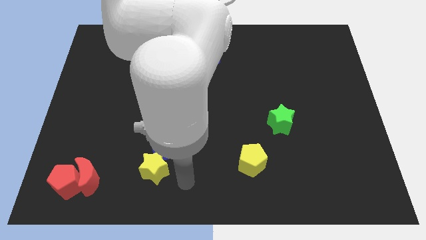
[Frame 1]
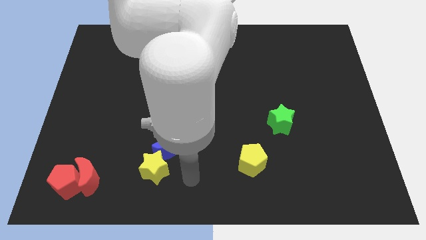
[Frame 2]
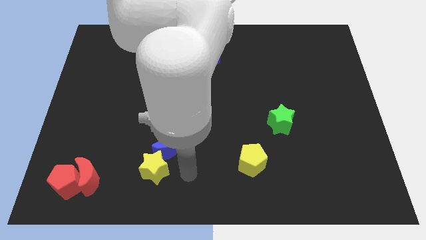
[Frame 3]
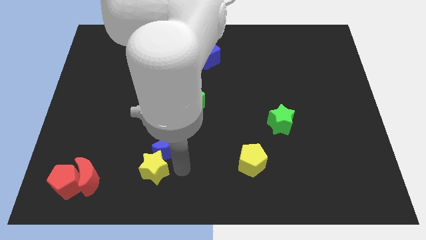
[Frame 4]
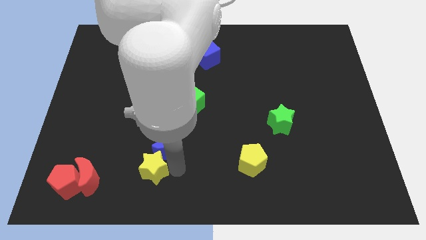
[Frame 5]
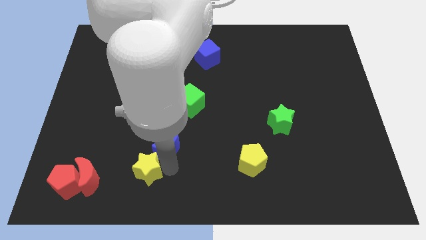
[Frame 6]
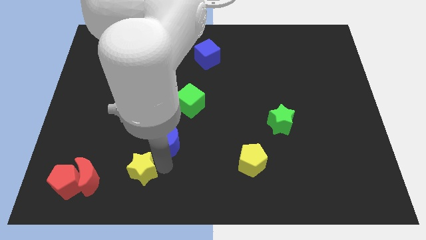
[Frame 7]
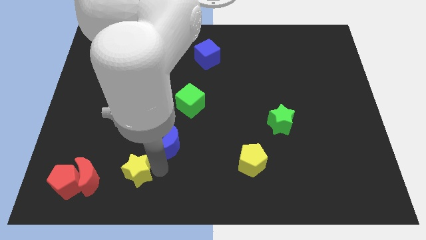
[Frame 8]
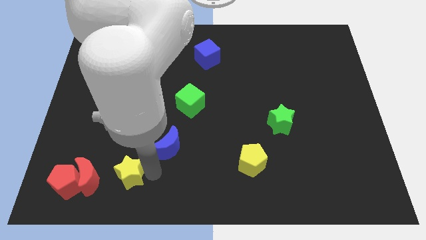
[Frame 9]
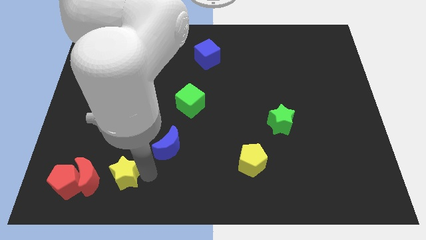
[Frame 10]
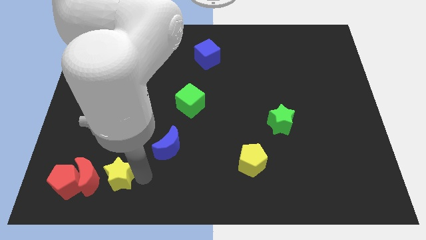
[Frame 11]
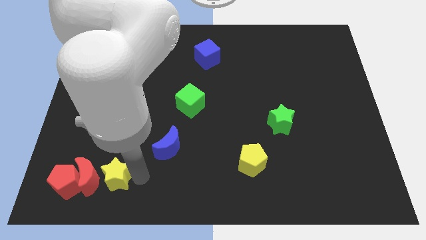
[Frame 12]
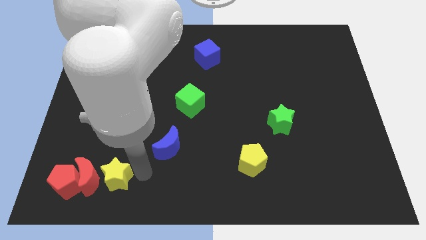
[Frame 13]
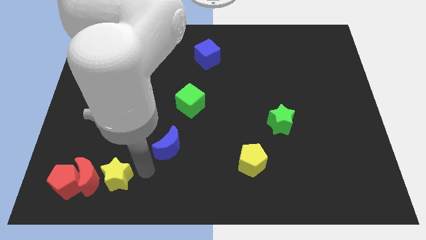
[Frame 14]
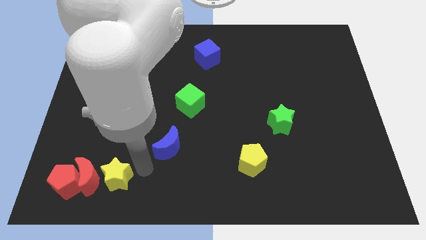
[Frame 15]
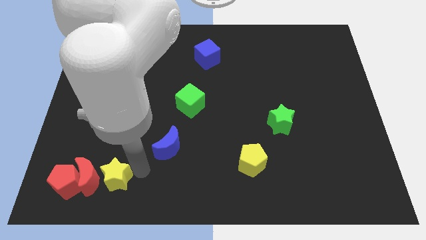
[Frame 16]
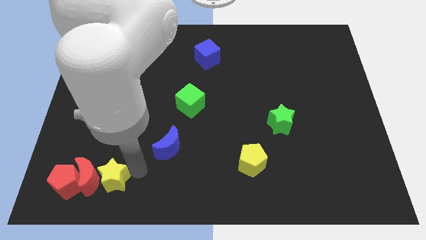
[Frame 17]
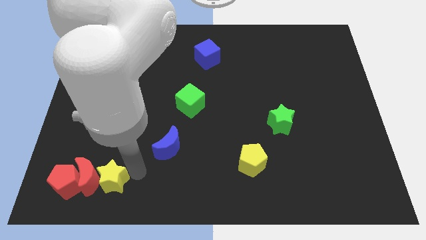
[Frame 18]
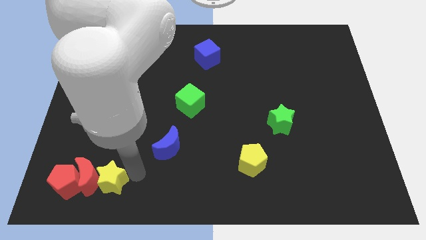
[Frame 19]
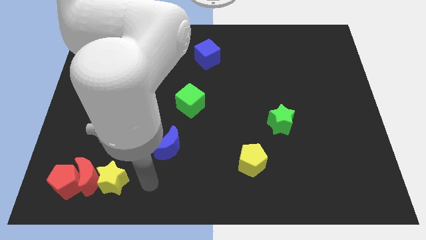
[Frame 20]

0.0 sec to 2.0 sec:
push the yellow star to the right of the red crescent

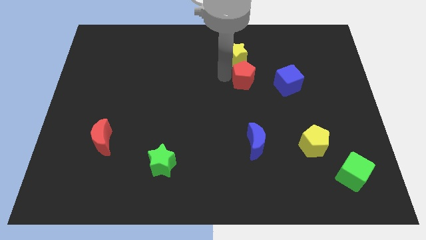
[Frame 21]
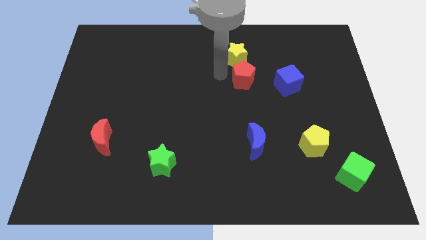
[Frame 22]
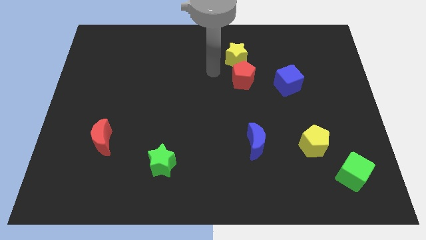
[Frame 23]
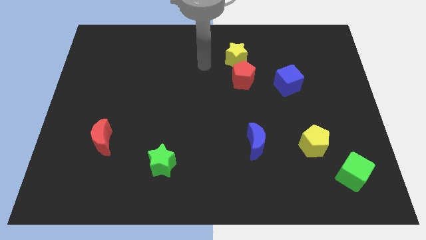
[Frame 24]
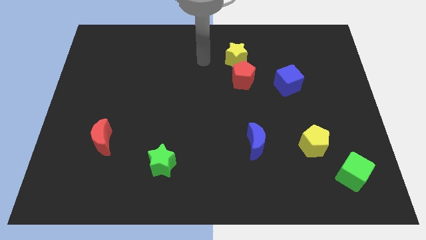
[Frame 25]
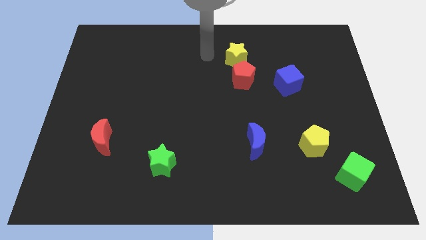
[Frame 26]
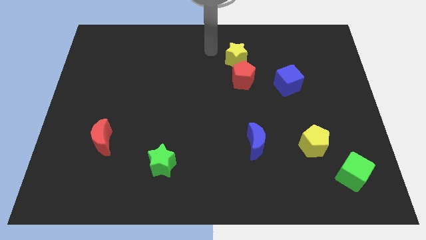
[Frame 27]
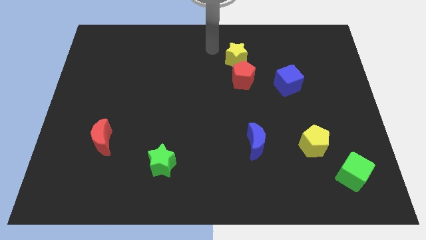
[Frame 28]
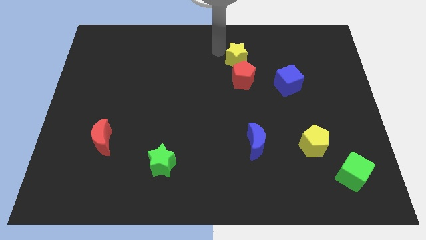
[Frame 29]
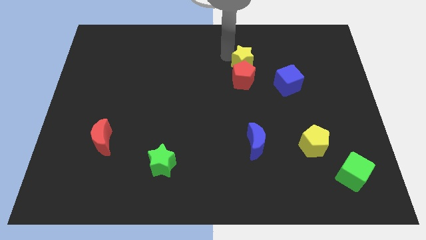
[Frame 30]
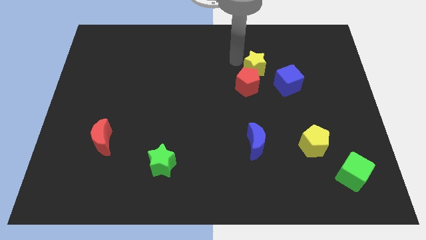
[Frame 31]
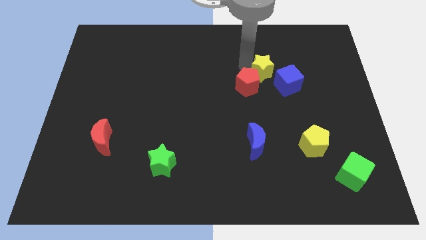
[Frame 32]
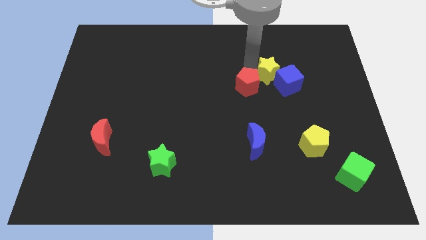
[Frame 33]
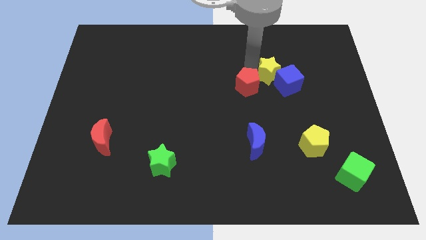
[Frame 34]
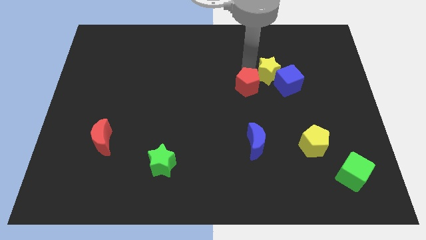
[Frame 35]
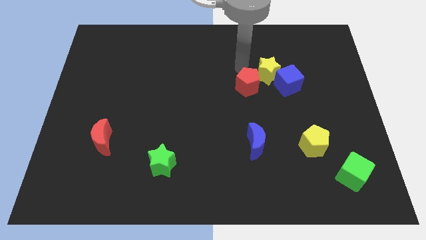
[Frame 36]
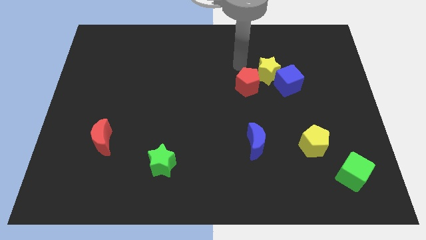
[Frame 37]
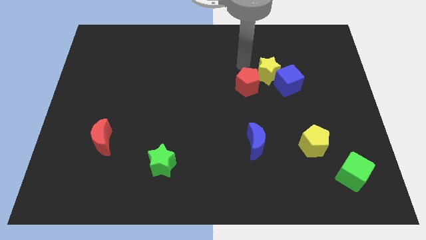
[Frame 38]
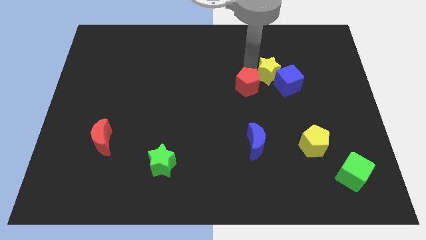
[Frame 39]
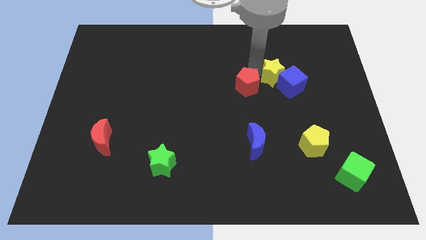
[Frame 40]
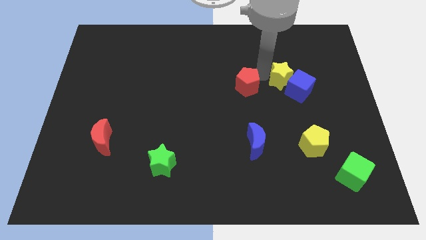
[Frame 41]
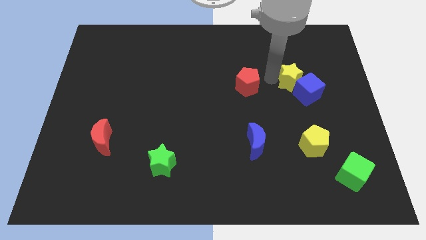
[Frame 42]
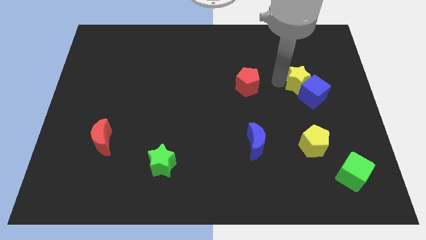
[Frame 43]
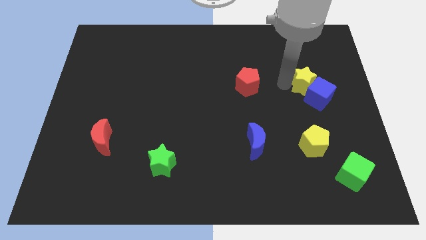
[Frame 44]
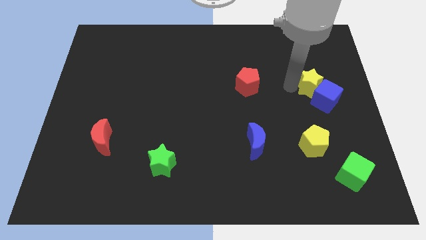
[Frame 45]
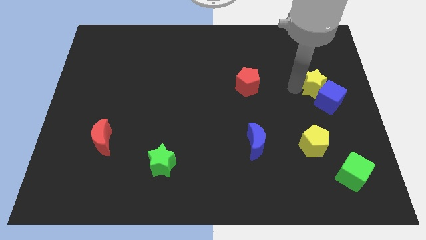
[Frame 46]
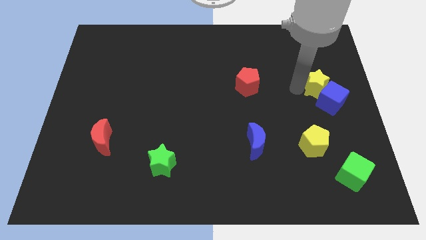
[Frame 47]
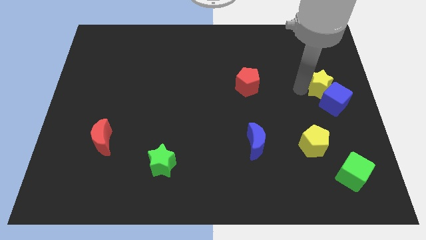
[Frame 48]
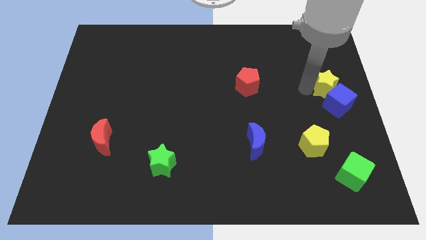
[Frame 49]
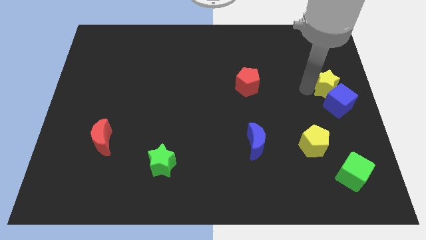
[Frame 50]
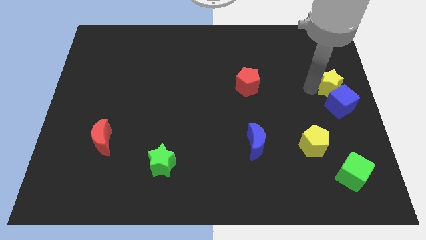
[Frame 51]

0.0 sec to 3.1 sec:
push the blue cube with the yellow star towards the right center of the board

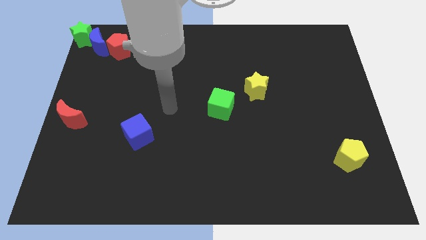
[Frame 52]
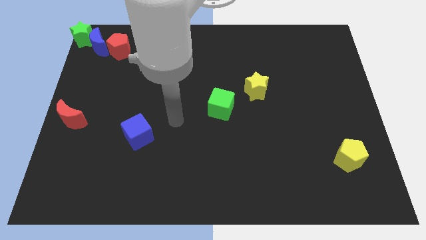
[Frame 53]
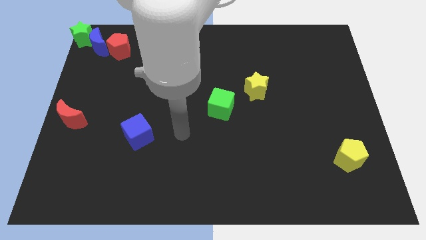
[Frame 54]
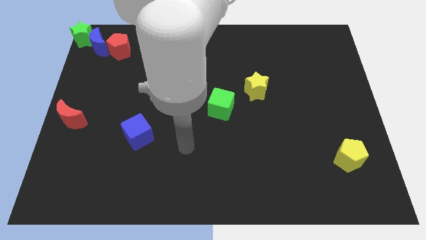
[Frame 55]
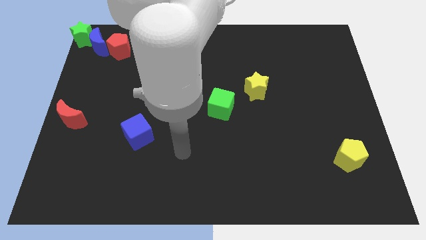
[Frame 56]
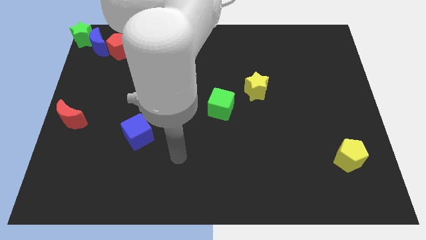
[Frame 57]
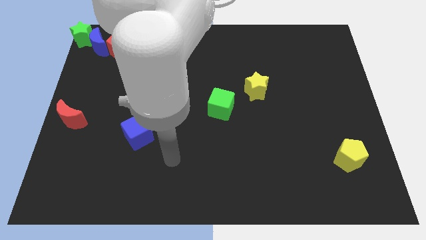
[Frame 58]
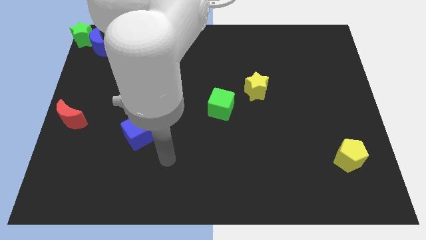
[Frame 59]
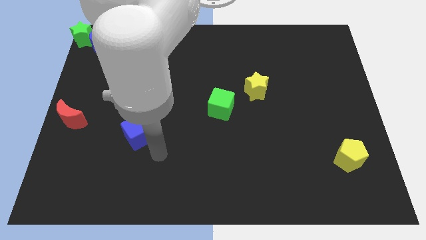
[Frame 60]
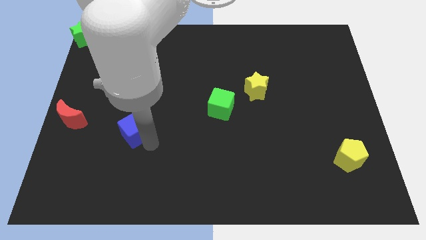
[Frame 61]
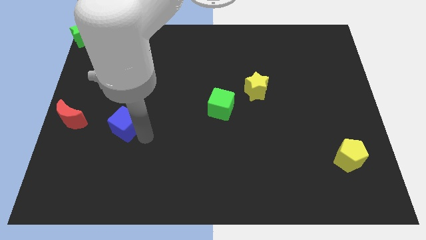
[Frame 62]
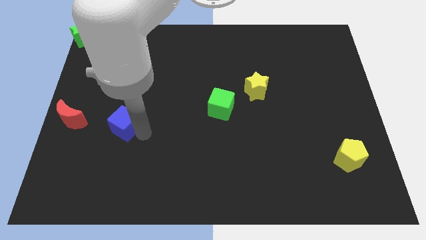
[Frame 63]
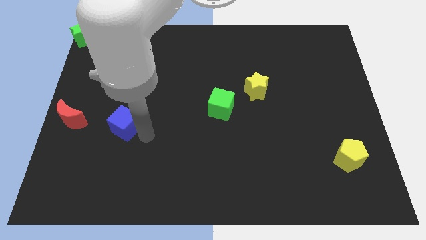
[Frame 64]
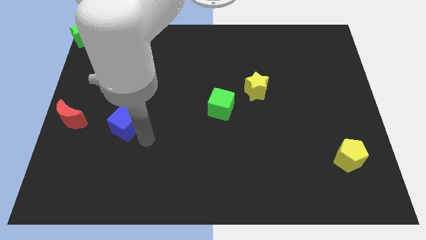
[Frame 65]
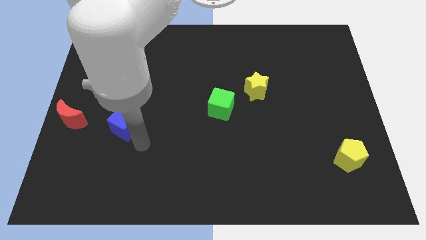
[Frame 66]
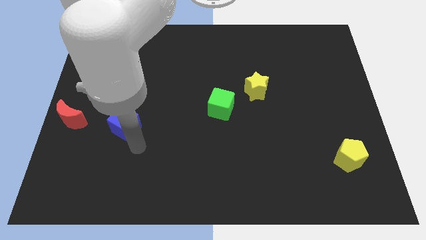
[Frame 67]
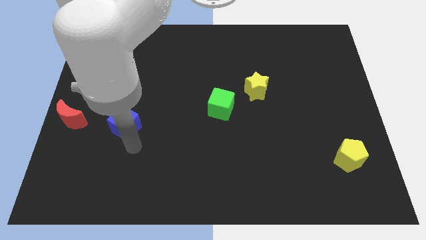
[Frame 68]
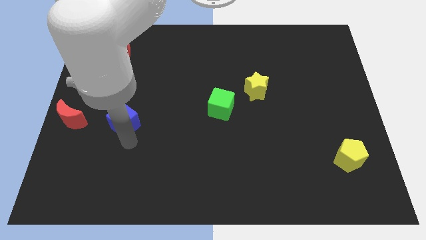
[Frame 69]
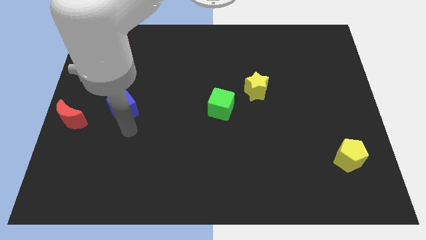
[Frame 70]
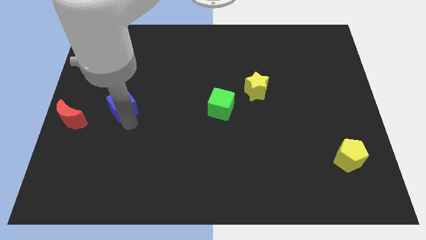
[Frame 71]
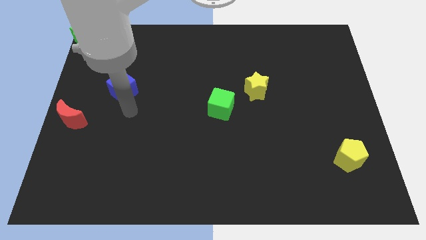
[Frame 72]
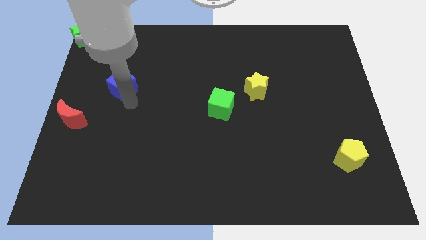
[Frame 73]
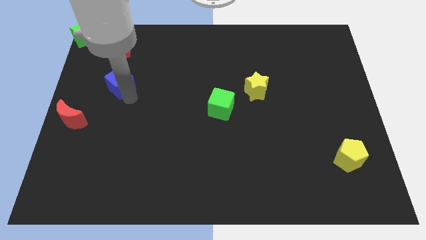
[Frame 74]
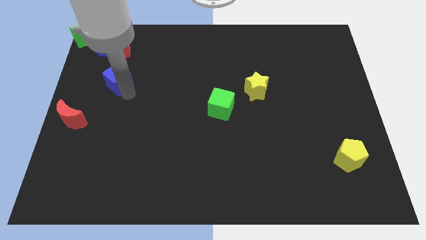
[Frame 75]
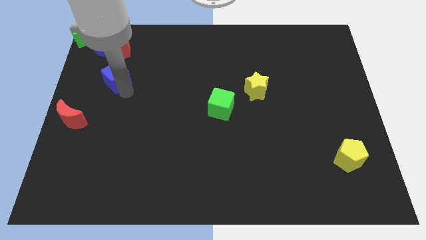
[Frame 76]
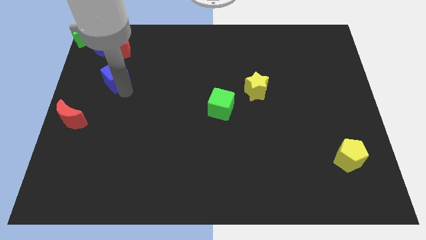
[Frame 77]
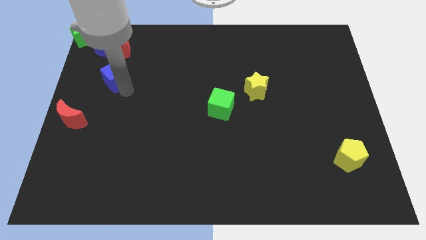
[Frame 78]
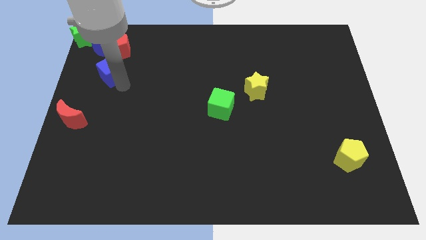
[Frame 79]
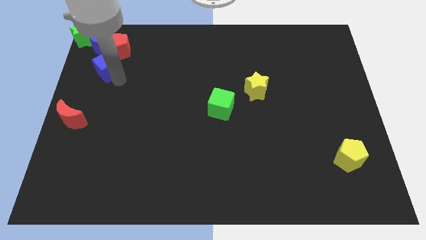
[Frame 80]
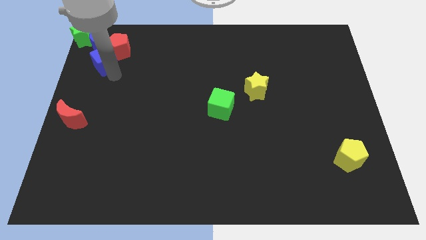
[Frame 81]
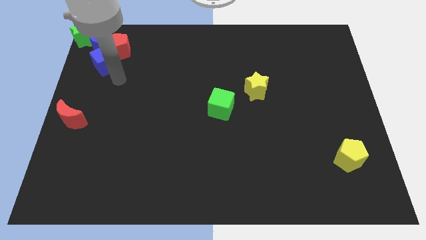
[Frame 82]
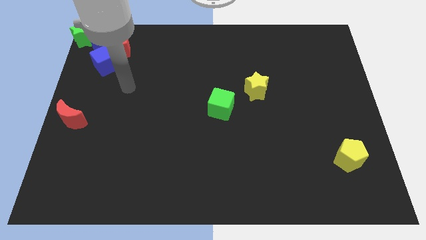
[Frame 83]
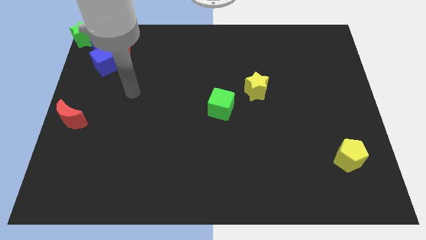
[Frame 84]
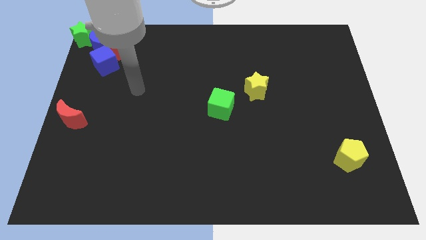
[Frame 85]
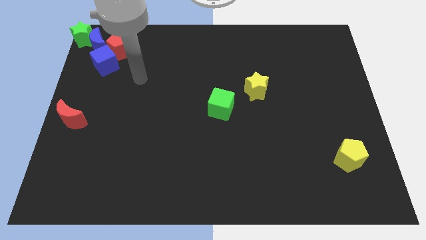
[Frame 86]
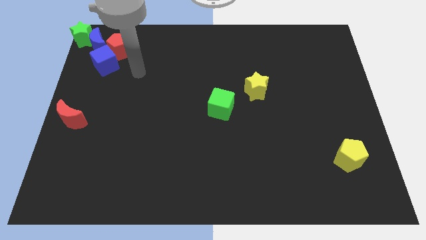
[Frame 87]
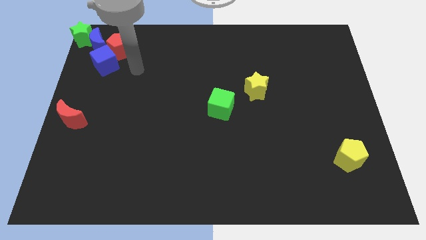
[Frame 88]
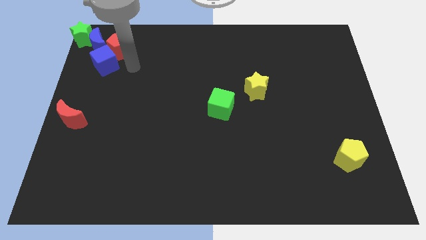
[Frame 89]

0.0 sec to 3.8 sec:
move the blue cube to the top left

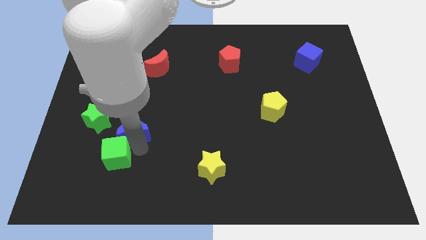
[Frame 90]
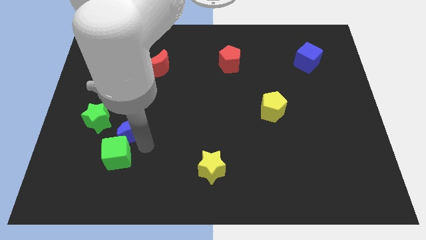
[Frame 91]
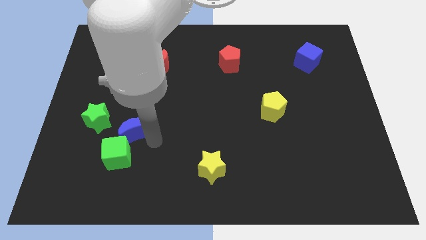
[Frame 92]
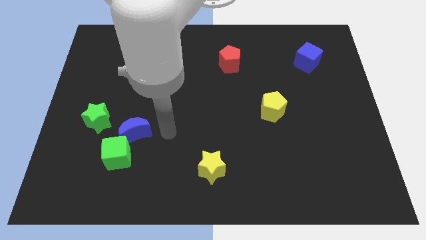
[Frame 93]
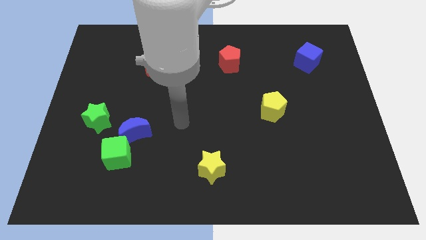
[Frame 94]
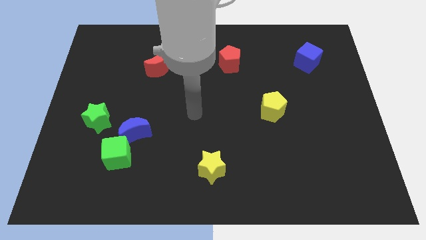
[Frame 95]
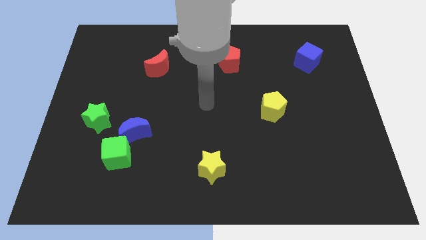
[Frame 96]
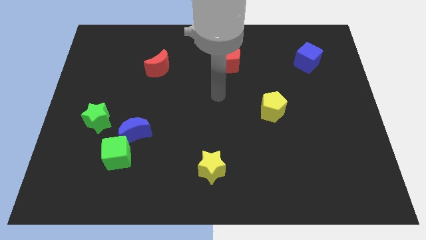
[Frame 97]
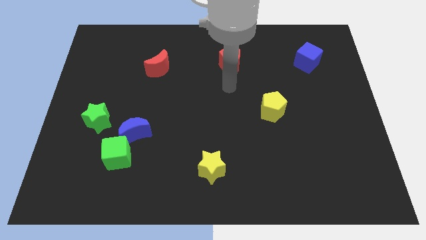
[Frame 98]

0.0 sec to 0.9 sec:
point your arm at the bottom of the red pentagon
